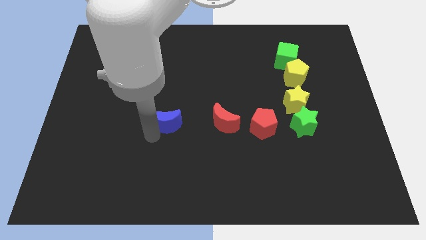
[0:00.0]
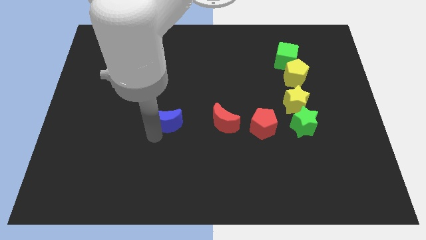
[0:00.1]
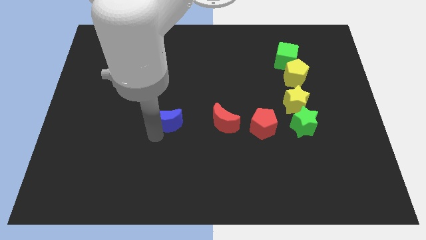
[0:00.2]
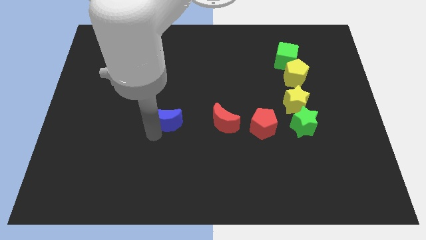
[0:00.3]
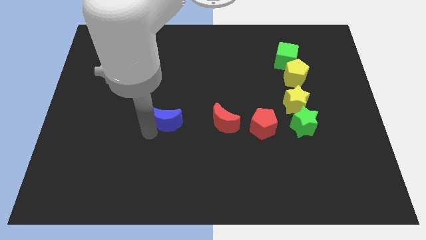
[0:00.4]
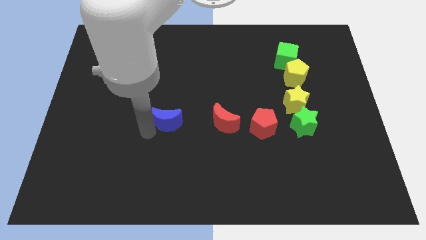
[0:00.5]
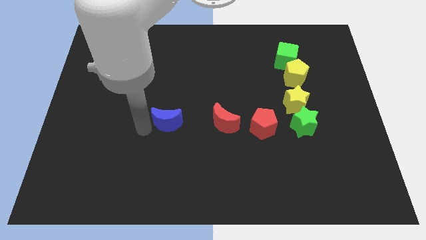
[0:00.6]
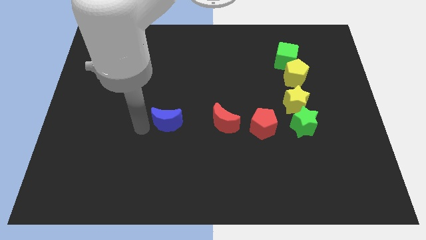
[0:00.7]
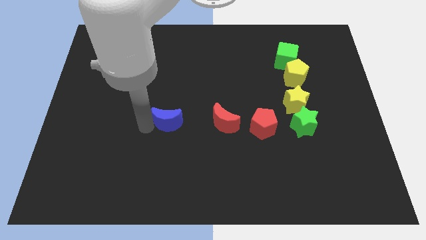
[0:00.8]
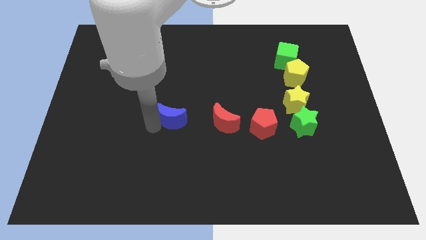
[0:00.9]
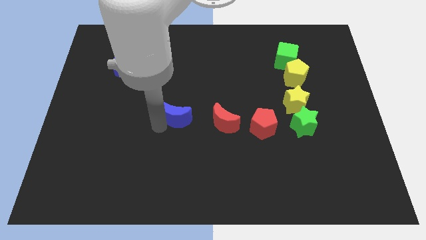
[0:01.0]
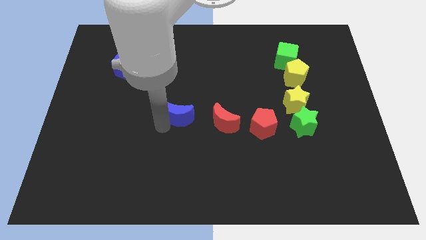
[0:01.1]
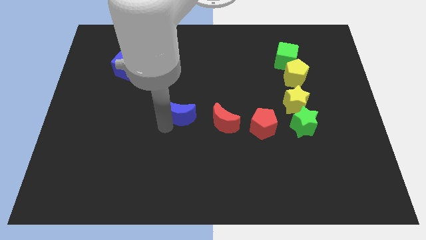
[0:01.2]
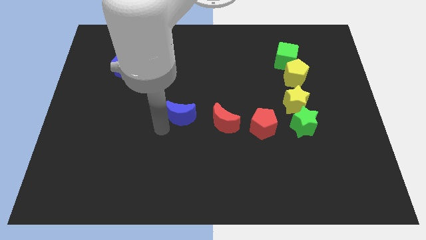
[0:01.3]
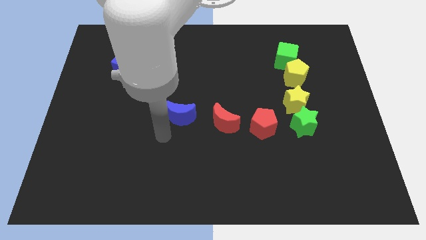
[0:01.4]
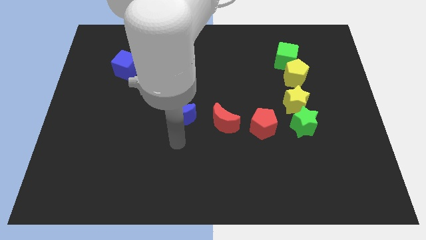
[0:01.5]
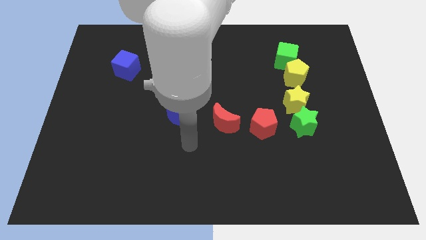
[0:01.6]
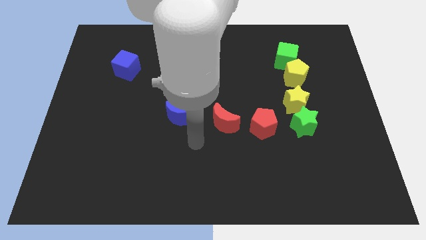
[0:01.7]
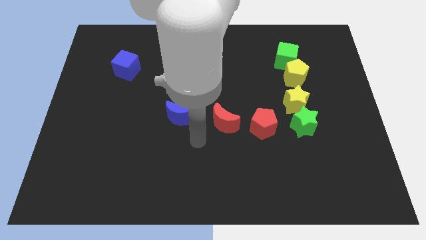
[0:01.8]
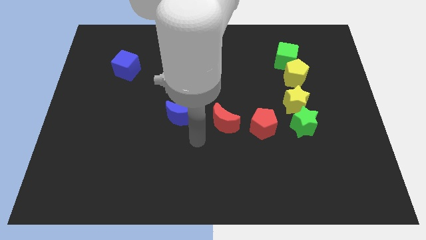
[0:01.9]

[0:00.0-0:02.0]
push the blue crescent towards red crescent

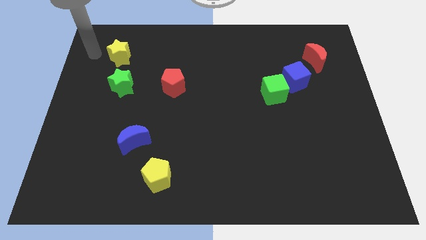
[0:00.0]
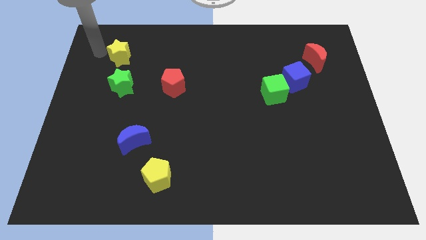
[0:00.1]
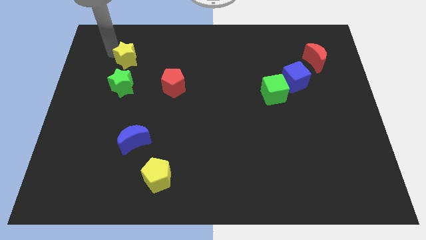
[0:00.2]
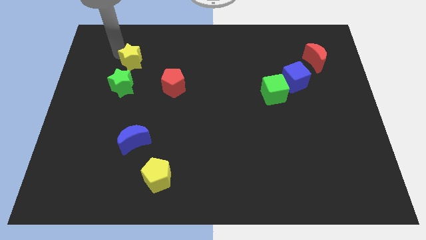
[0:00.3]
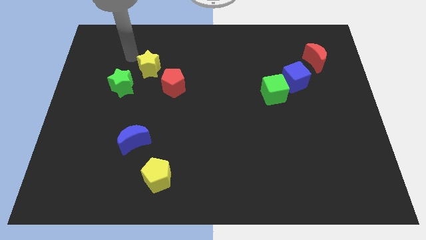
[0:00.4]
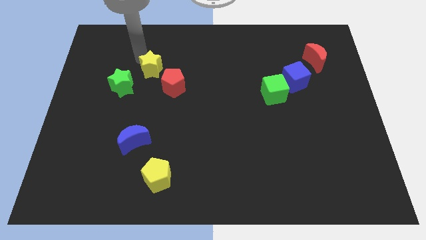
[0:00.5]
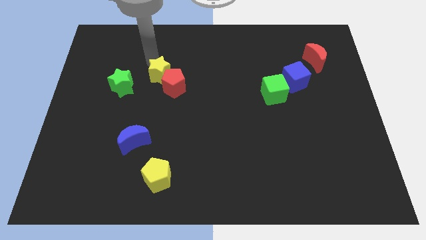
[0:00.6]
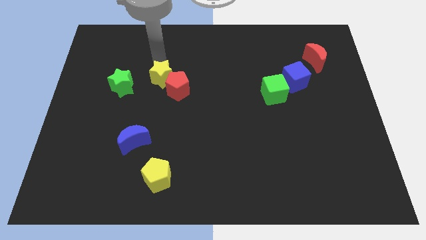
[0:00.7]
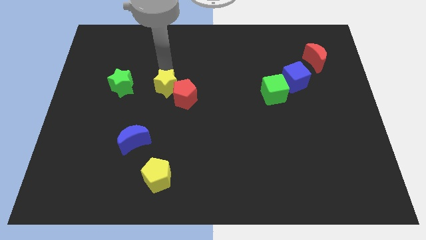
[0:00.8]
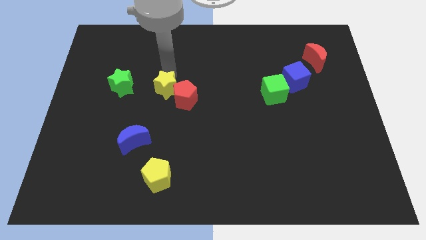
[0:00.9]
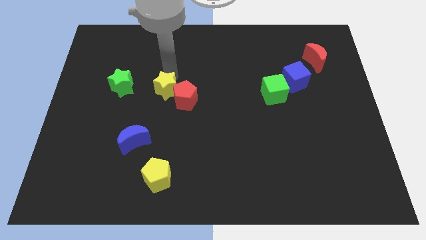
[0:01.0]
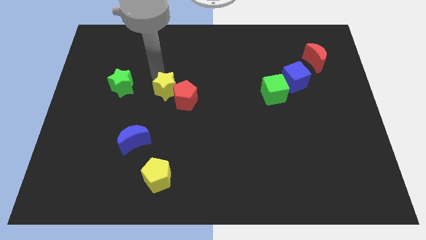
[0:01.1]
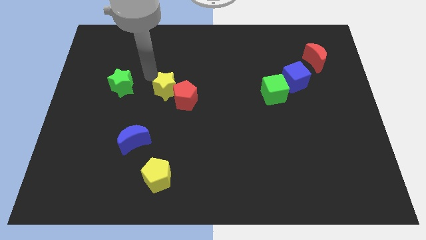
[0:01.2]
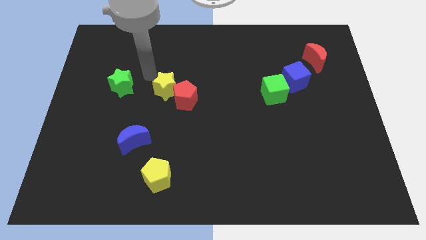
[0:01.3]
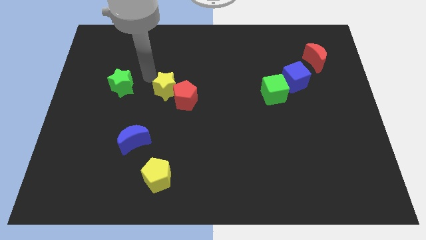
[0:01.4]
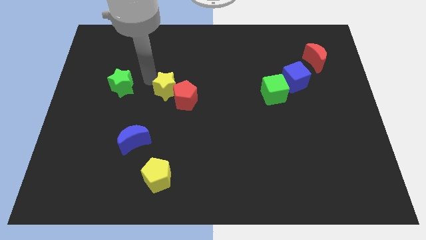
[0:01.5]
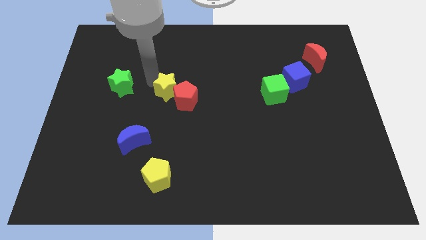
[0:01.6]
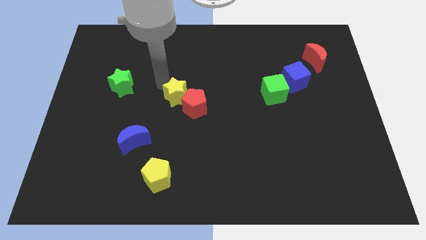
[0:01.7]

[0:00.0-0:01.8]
move yellow star into red pentagon

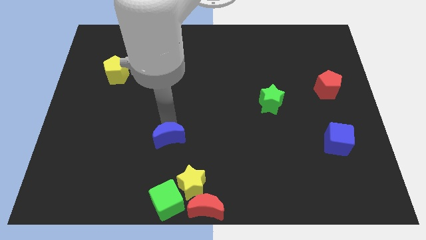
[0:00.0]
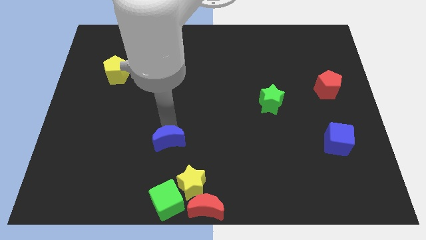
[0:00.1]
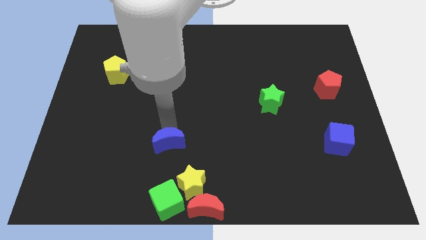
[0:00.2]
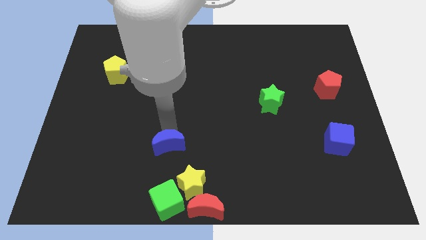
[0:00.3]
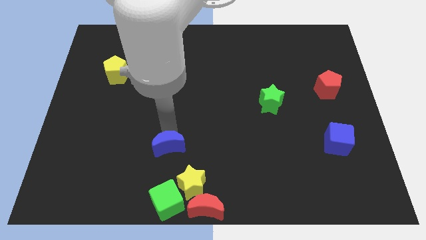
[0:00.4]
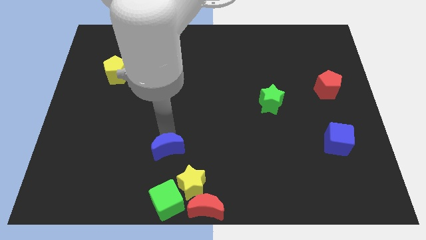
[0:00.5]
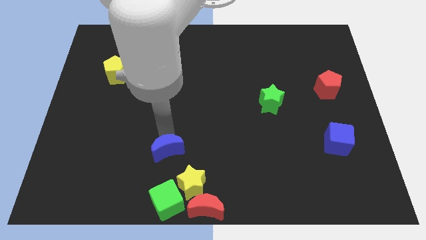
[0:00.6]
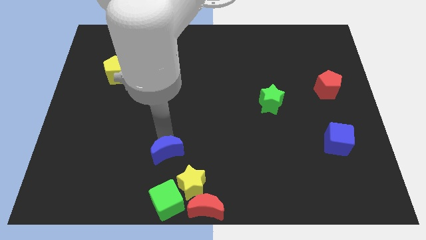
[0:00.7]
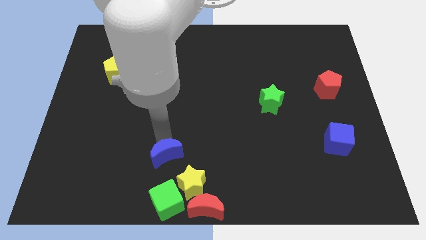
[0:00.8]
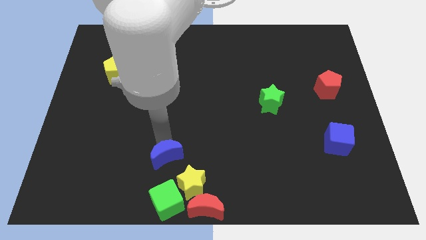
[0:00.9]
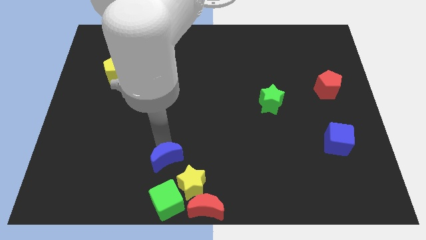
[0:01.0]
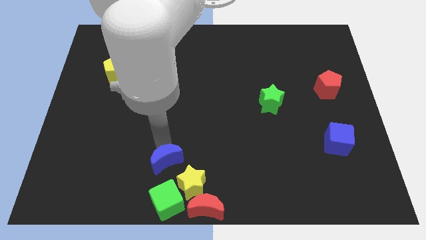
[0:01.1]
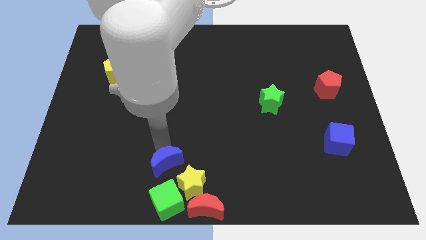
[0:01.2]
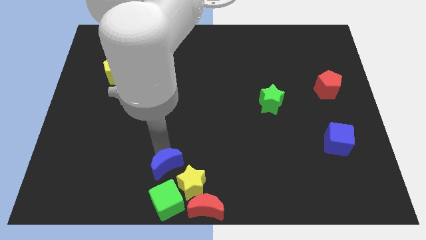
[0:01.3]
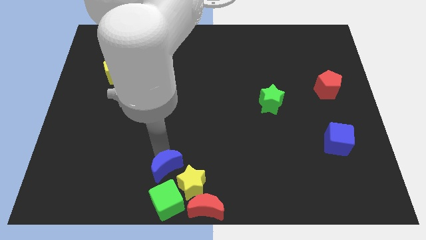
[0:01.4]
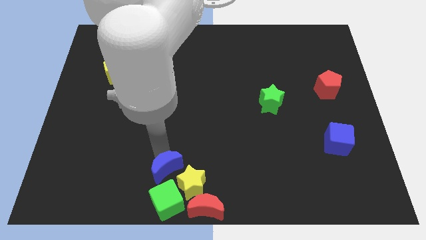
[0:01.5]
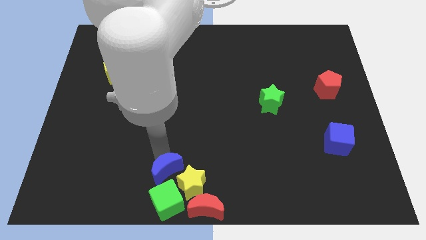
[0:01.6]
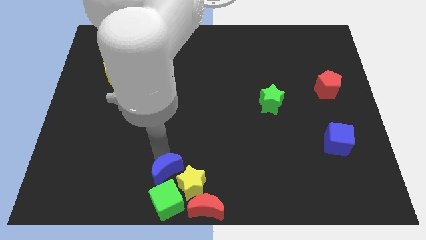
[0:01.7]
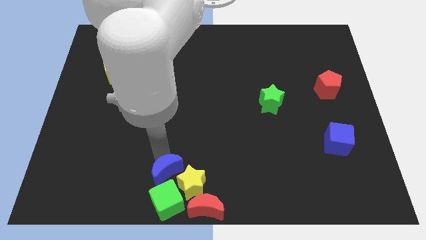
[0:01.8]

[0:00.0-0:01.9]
place the blue crescent on top of the yellow stargreen cube

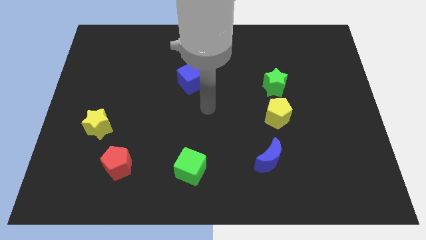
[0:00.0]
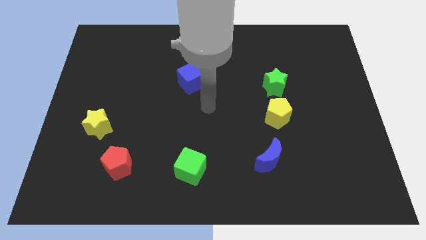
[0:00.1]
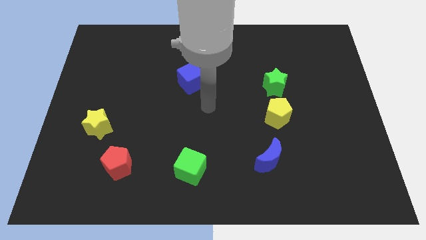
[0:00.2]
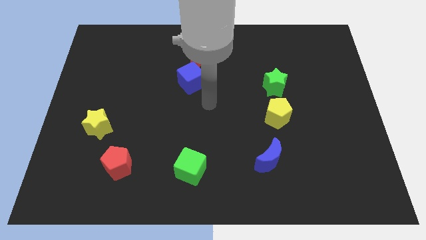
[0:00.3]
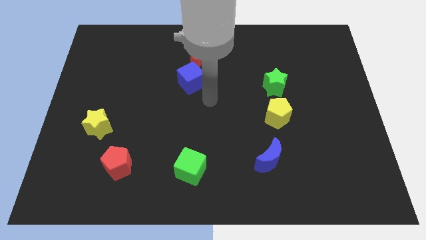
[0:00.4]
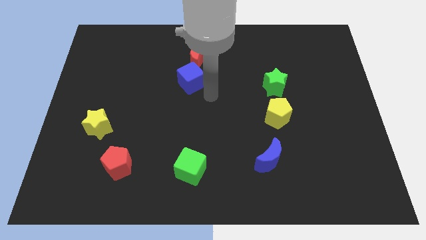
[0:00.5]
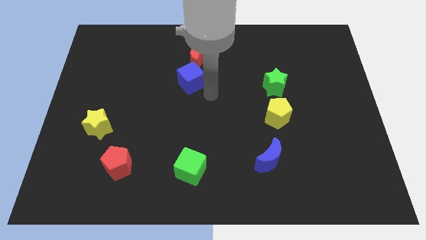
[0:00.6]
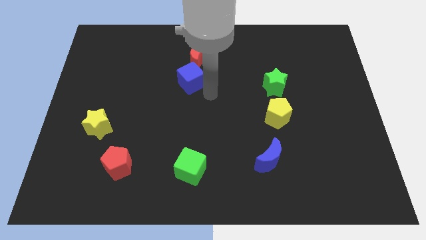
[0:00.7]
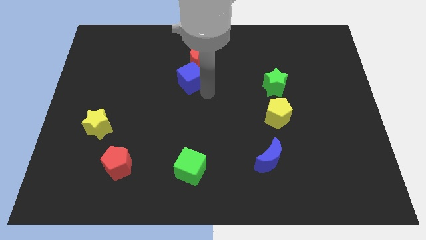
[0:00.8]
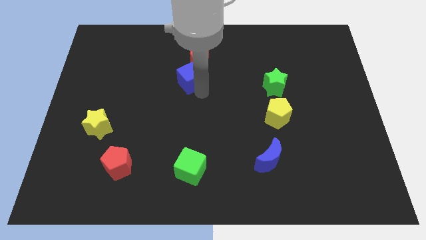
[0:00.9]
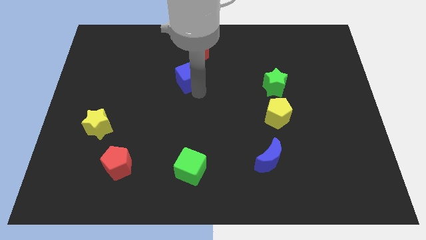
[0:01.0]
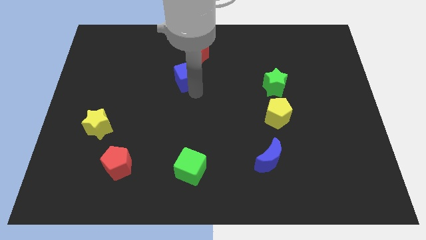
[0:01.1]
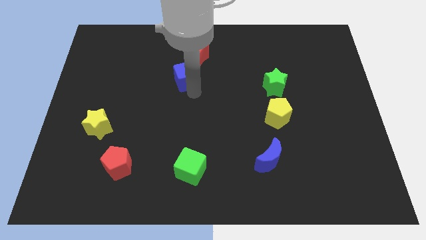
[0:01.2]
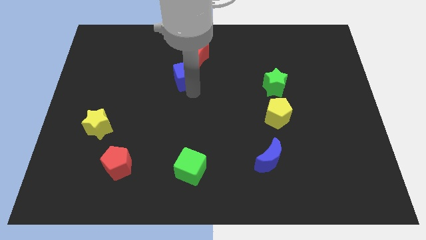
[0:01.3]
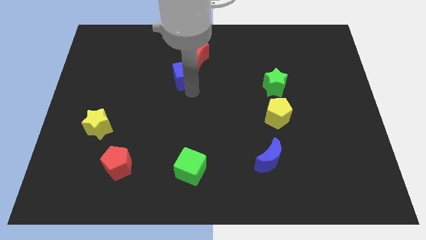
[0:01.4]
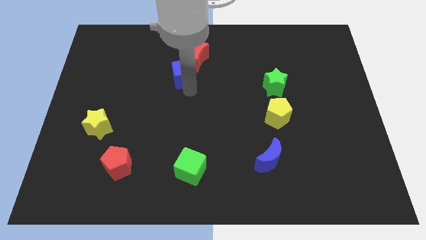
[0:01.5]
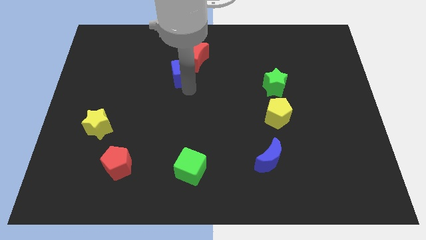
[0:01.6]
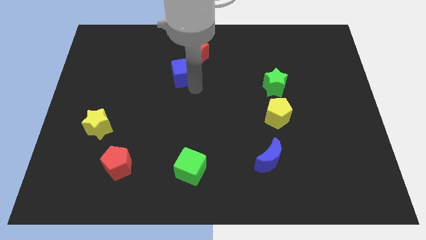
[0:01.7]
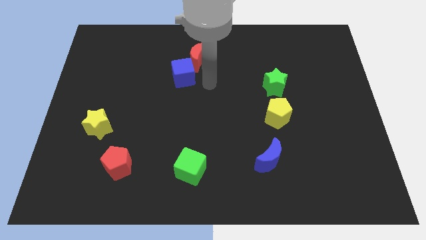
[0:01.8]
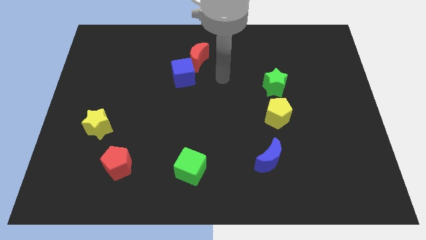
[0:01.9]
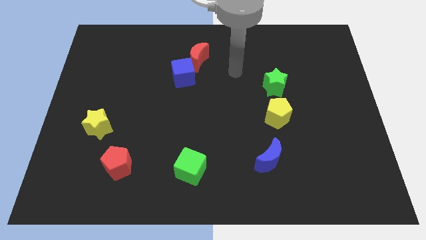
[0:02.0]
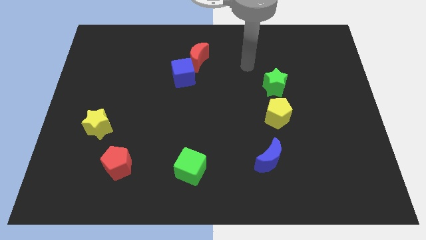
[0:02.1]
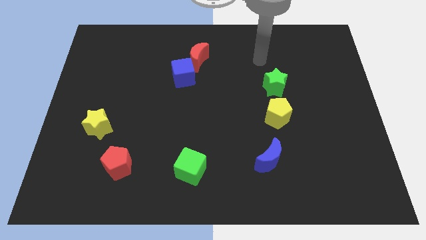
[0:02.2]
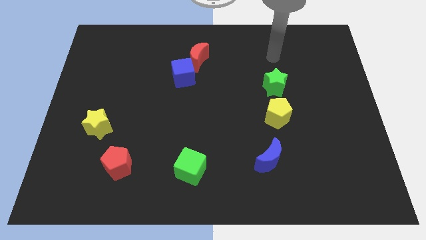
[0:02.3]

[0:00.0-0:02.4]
slide blue cube towards red crescent

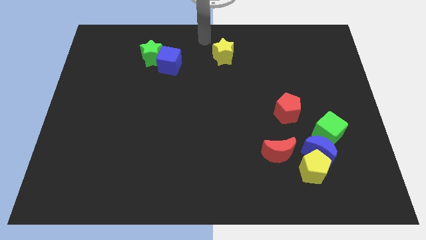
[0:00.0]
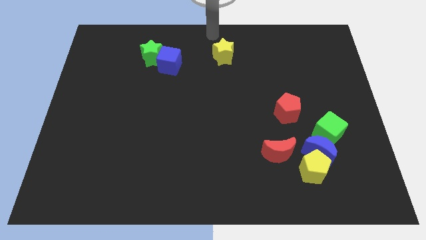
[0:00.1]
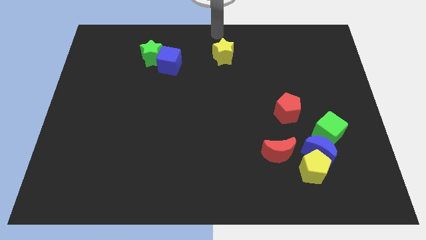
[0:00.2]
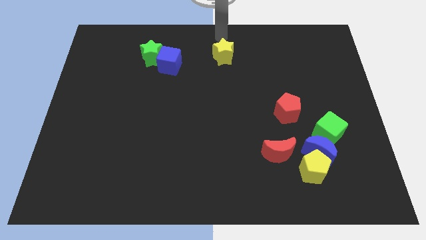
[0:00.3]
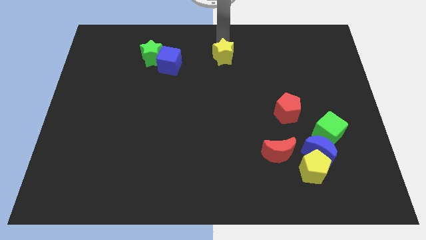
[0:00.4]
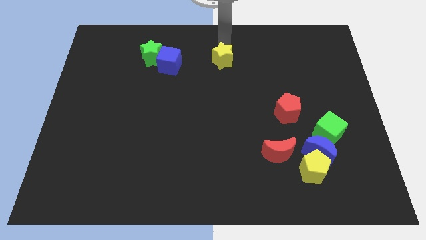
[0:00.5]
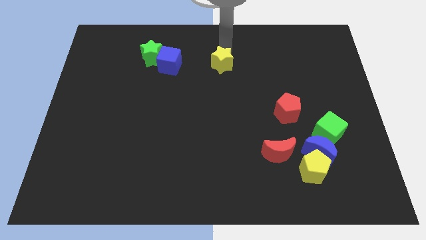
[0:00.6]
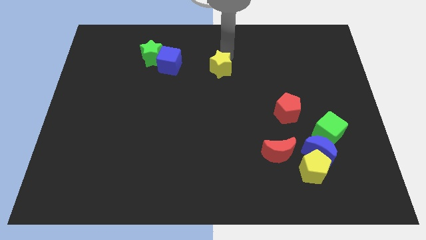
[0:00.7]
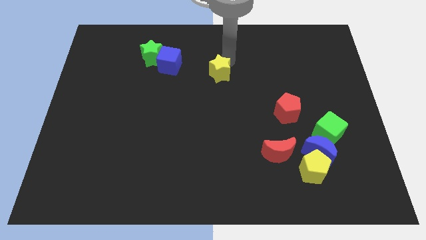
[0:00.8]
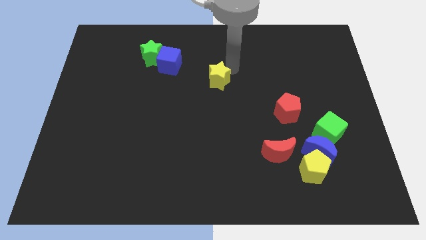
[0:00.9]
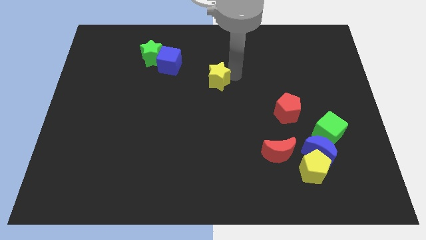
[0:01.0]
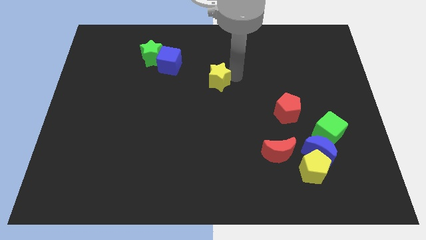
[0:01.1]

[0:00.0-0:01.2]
push the yellow star slightly downwards
